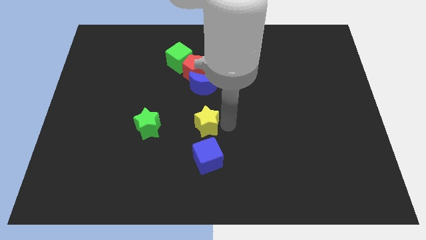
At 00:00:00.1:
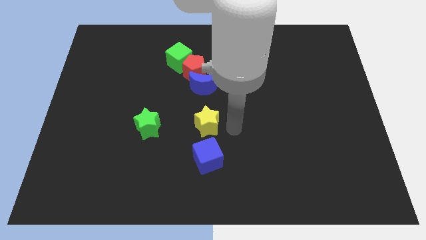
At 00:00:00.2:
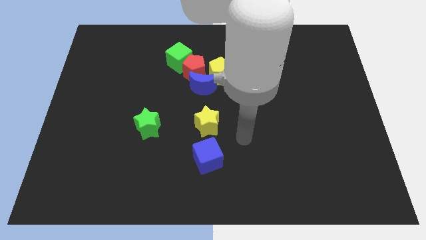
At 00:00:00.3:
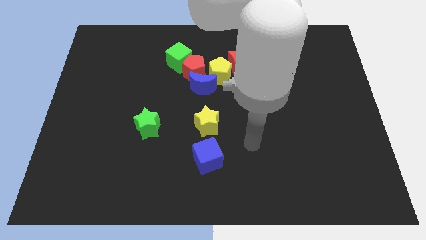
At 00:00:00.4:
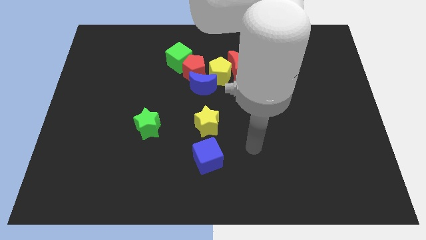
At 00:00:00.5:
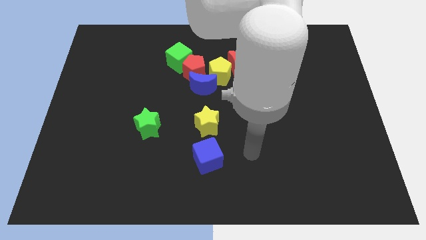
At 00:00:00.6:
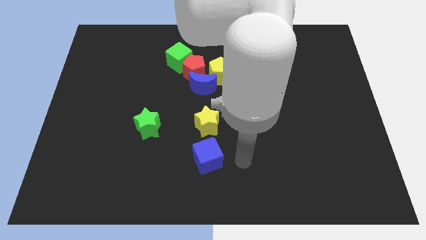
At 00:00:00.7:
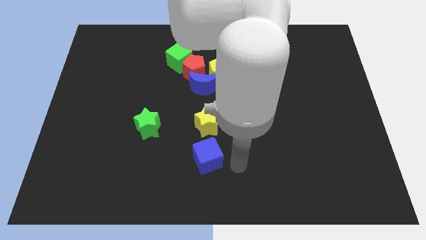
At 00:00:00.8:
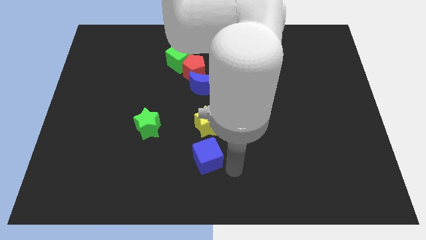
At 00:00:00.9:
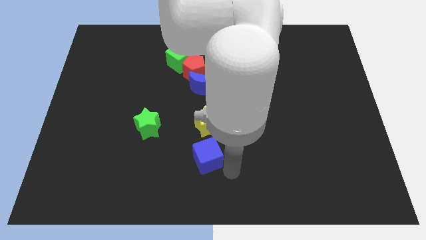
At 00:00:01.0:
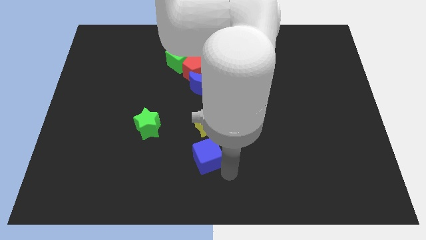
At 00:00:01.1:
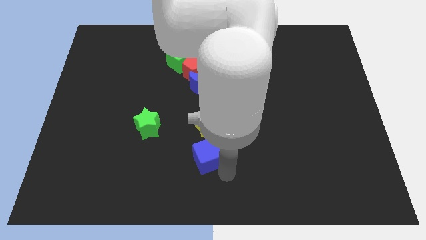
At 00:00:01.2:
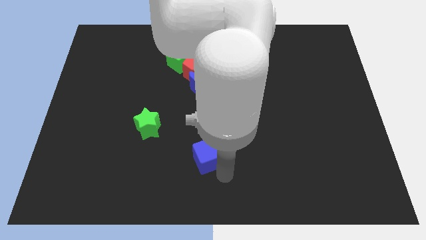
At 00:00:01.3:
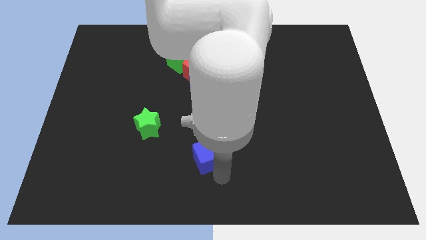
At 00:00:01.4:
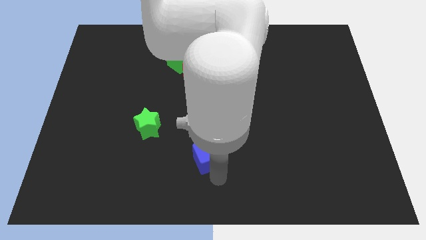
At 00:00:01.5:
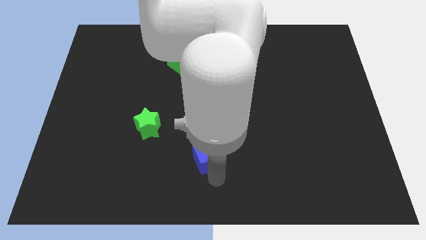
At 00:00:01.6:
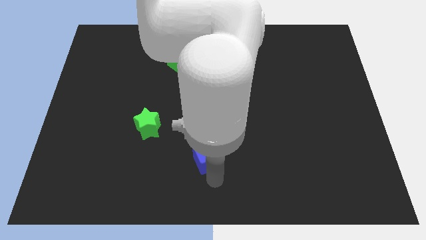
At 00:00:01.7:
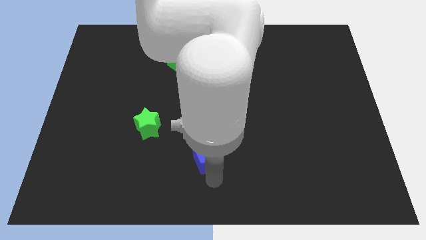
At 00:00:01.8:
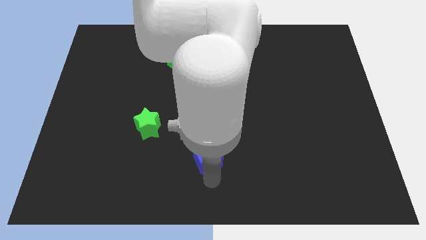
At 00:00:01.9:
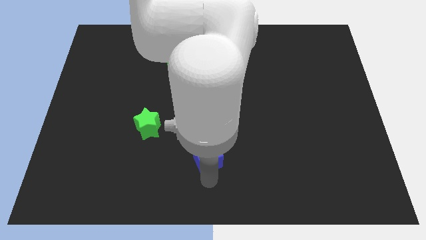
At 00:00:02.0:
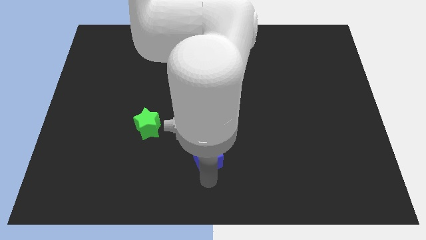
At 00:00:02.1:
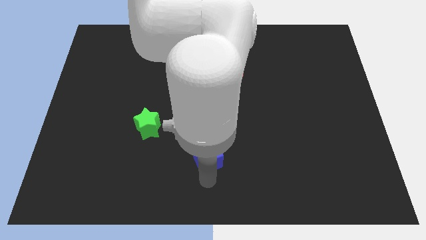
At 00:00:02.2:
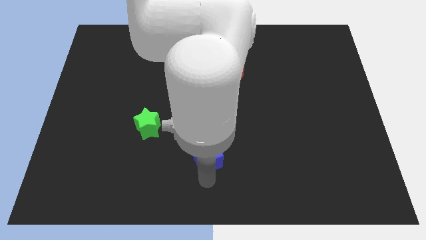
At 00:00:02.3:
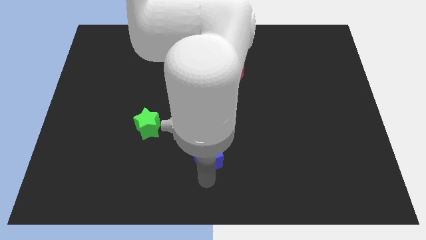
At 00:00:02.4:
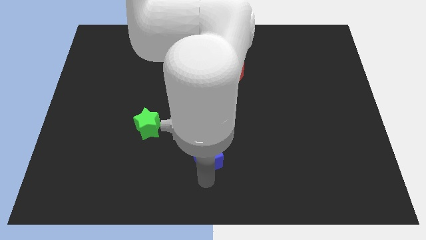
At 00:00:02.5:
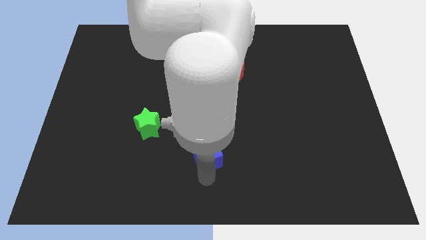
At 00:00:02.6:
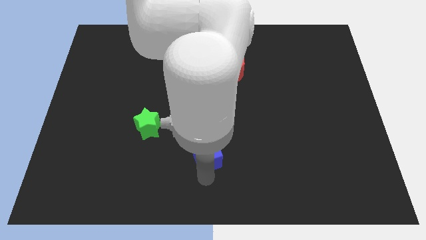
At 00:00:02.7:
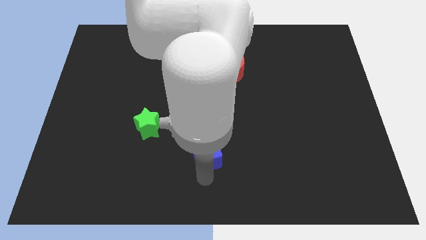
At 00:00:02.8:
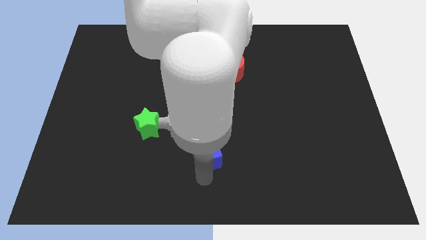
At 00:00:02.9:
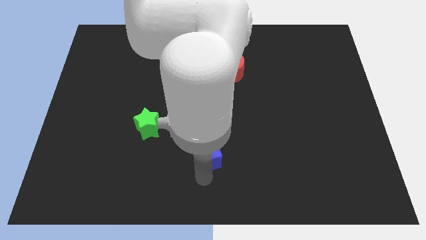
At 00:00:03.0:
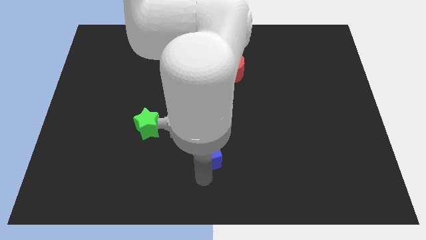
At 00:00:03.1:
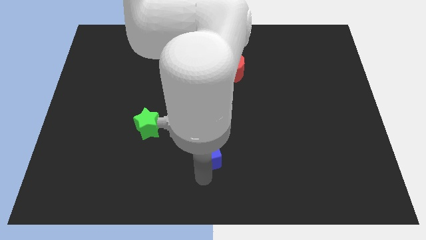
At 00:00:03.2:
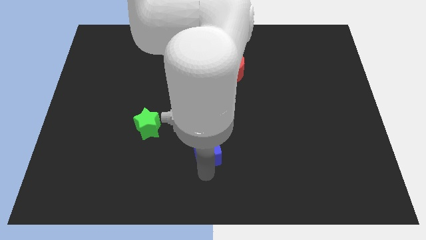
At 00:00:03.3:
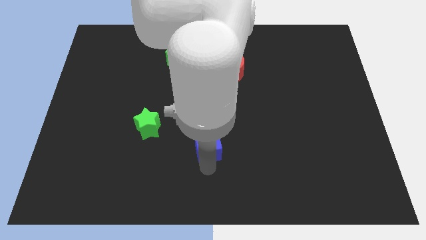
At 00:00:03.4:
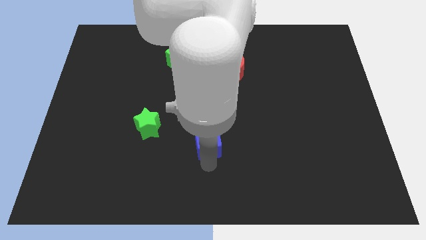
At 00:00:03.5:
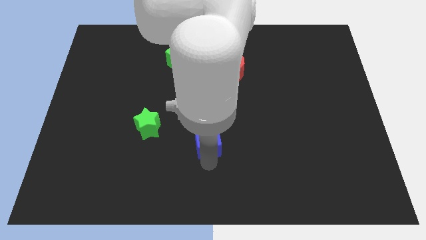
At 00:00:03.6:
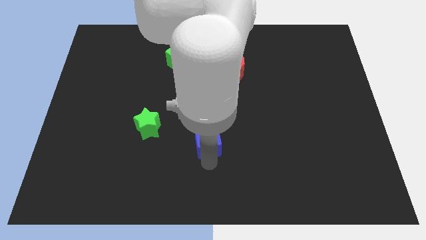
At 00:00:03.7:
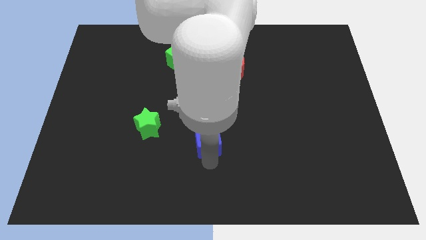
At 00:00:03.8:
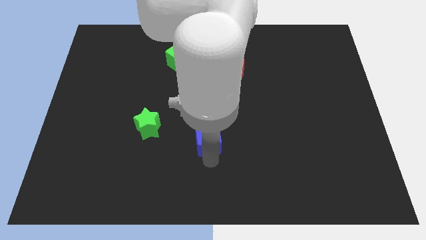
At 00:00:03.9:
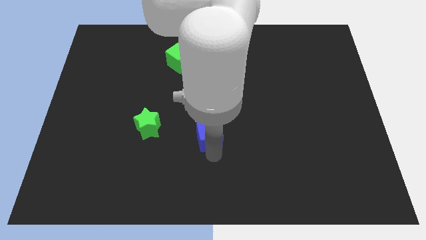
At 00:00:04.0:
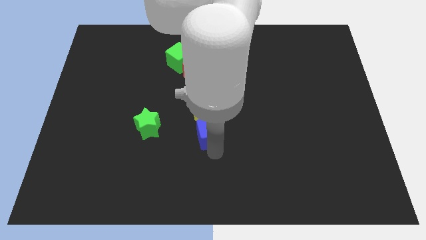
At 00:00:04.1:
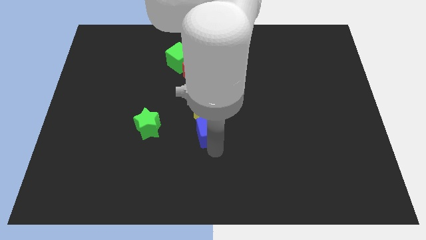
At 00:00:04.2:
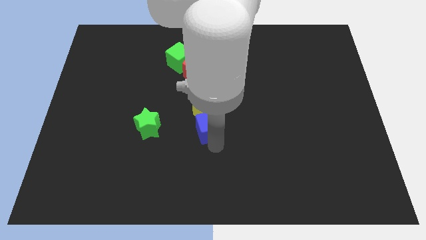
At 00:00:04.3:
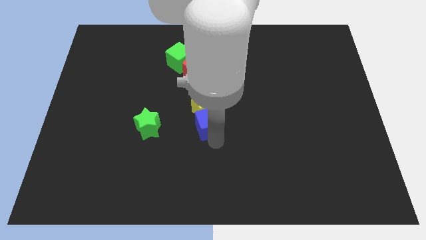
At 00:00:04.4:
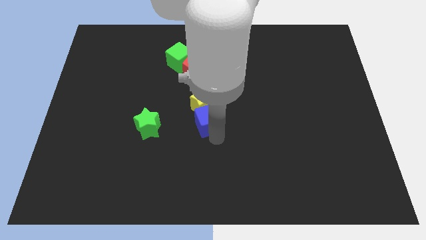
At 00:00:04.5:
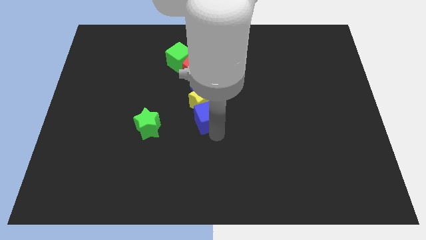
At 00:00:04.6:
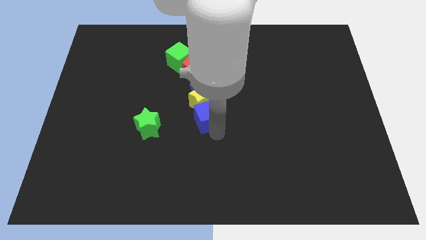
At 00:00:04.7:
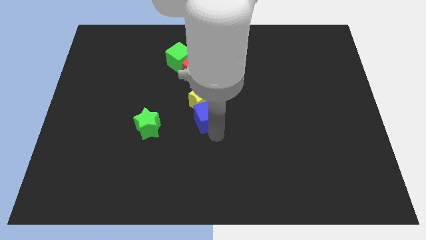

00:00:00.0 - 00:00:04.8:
push the blue cube and yellow star towards the group of blocks

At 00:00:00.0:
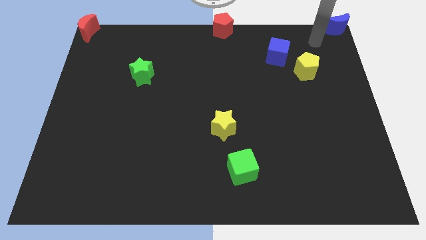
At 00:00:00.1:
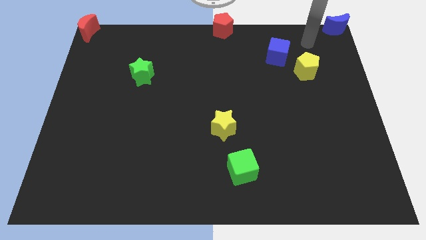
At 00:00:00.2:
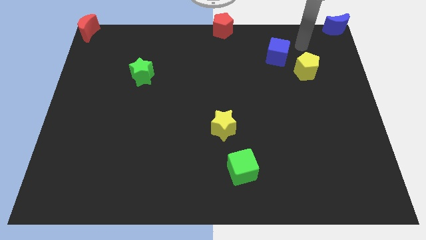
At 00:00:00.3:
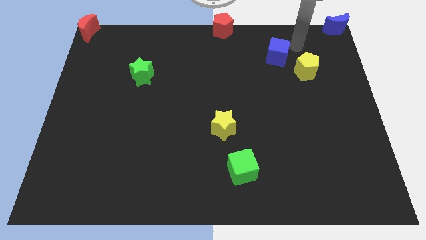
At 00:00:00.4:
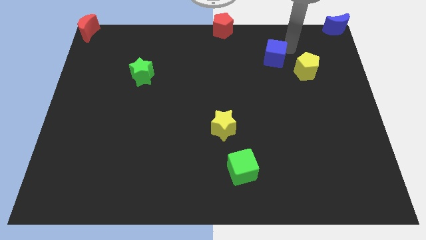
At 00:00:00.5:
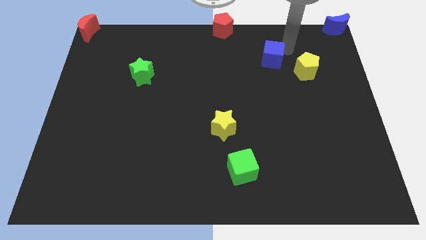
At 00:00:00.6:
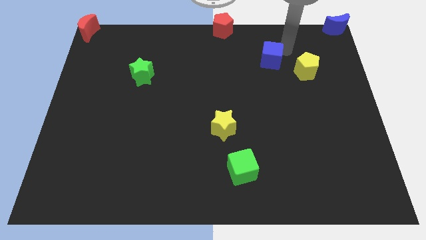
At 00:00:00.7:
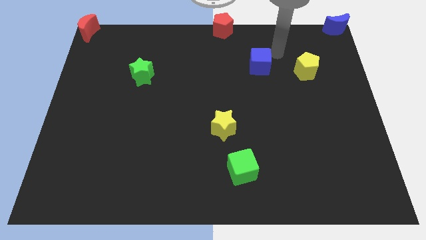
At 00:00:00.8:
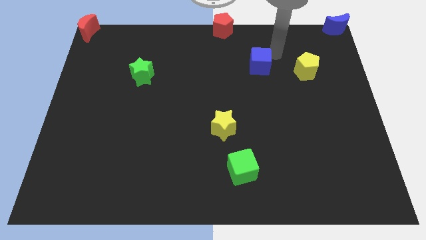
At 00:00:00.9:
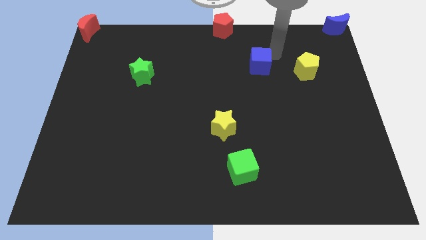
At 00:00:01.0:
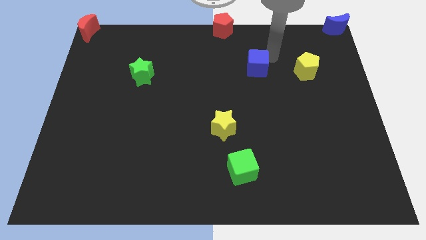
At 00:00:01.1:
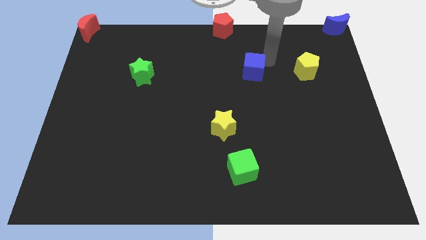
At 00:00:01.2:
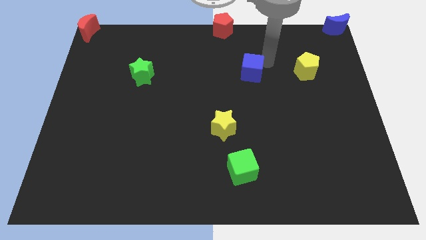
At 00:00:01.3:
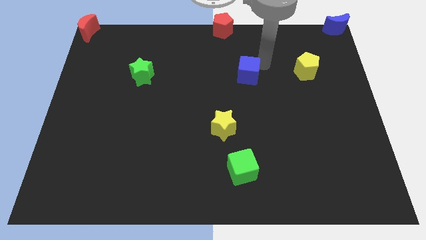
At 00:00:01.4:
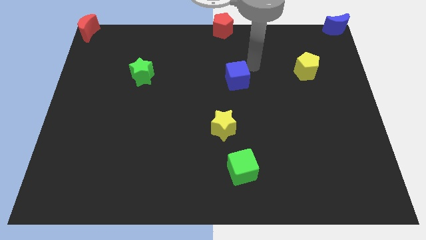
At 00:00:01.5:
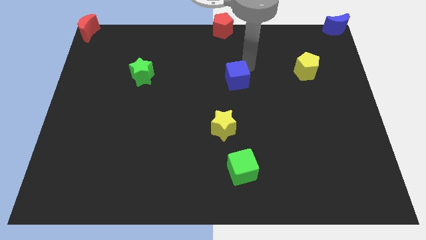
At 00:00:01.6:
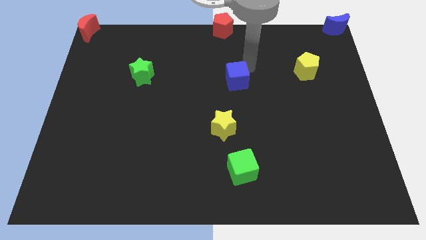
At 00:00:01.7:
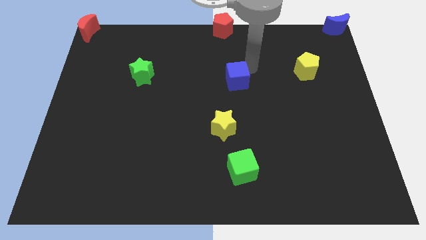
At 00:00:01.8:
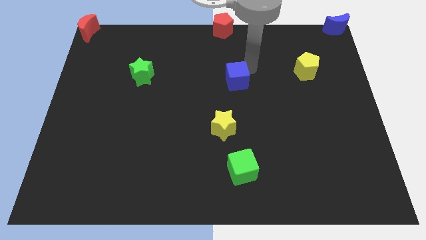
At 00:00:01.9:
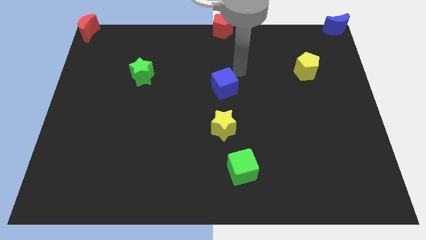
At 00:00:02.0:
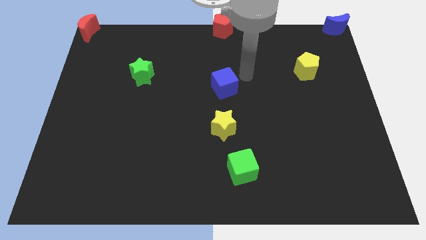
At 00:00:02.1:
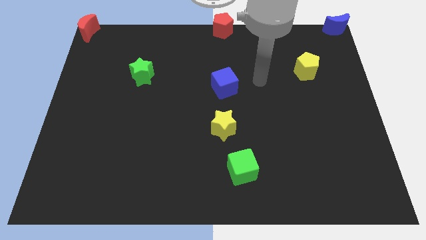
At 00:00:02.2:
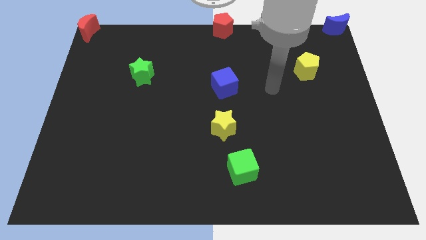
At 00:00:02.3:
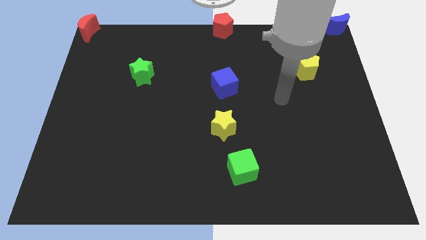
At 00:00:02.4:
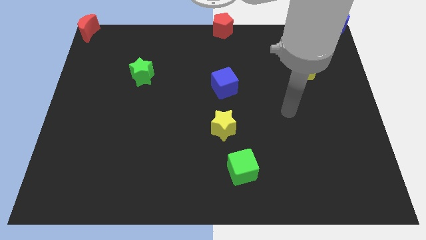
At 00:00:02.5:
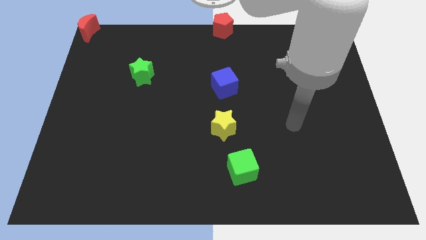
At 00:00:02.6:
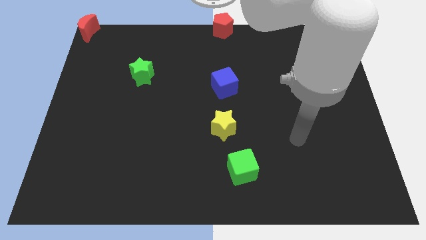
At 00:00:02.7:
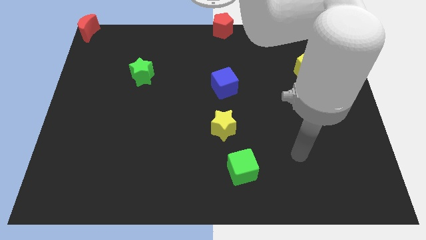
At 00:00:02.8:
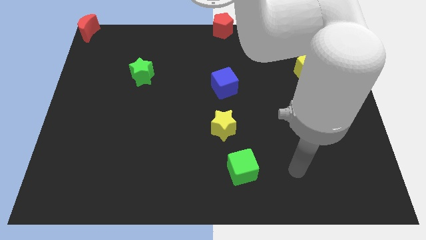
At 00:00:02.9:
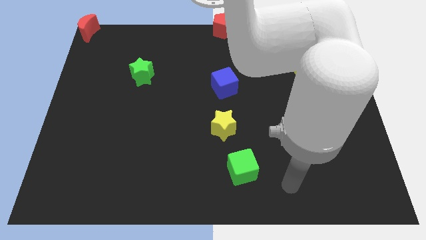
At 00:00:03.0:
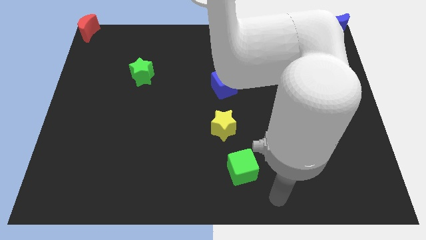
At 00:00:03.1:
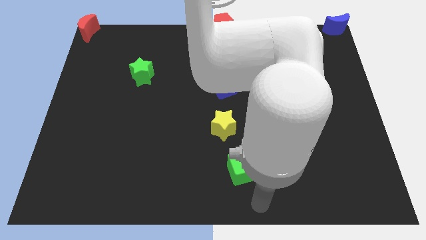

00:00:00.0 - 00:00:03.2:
push the blue cube towards the top of the yellow star

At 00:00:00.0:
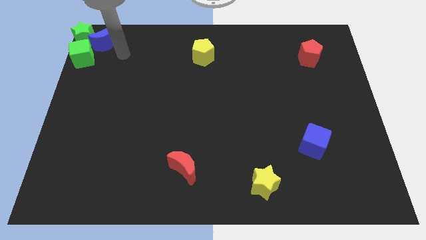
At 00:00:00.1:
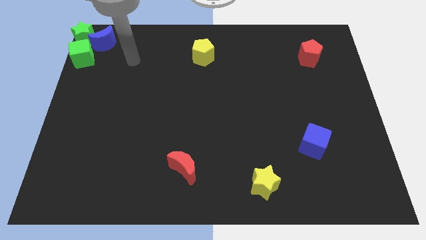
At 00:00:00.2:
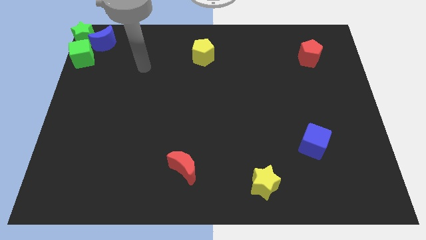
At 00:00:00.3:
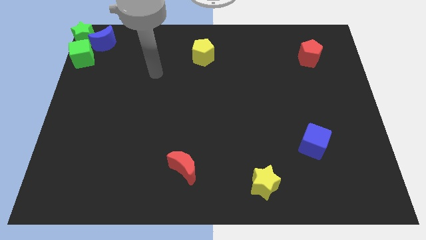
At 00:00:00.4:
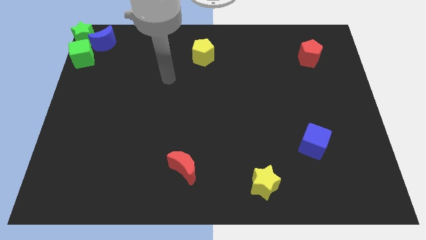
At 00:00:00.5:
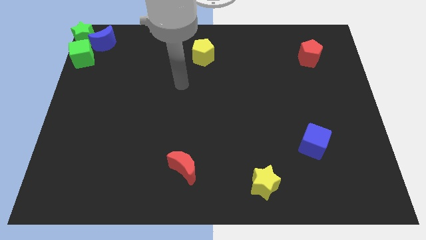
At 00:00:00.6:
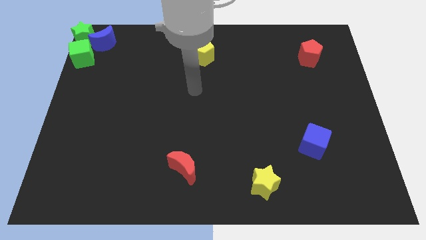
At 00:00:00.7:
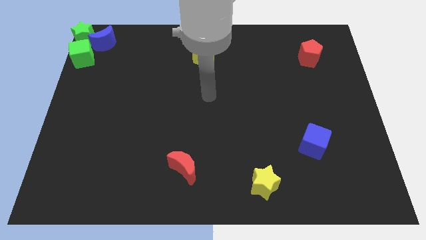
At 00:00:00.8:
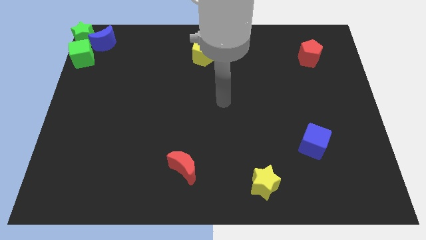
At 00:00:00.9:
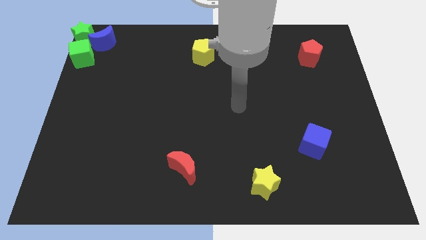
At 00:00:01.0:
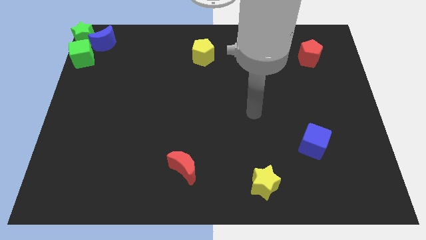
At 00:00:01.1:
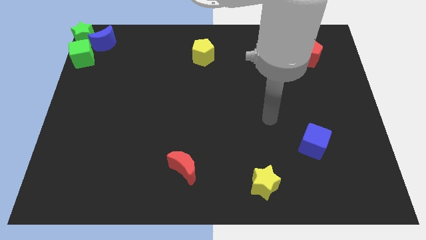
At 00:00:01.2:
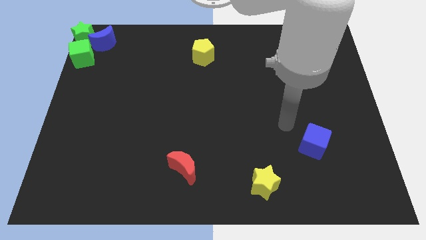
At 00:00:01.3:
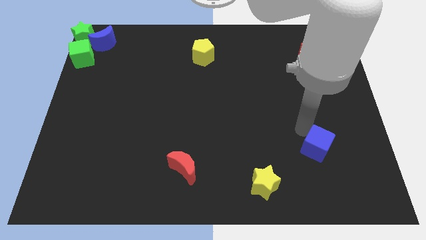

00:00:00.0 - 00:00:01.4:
go away from the blue moon
